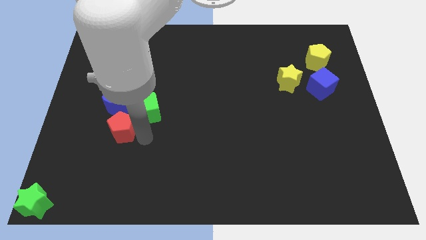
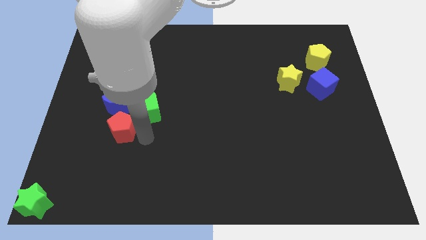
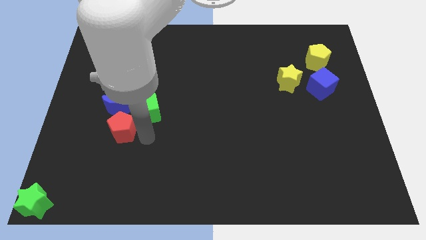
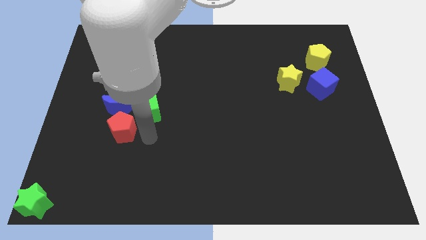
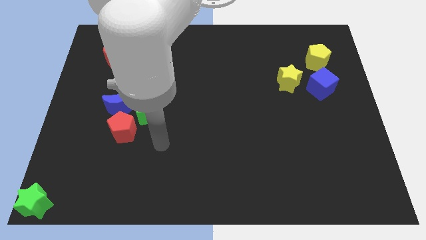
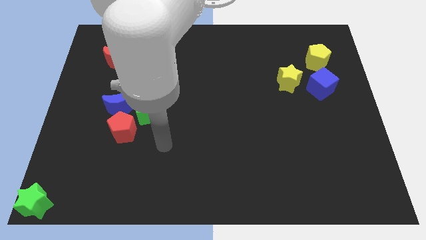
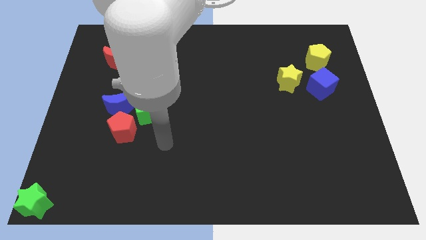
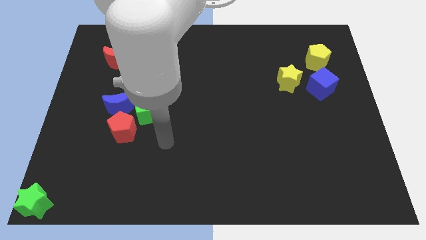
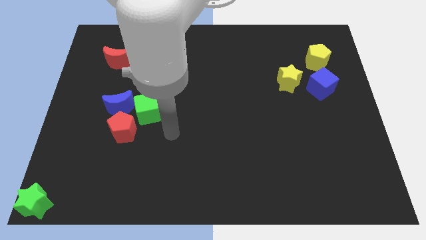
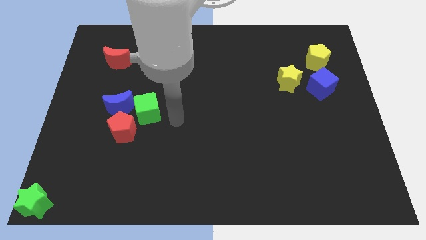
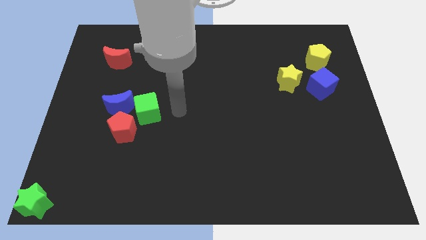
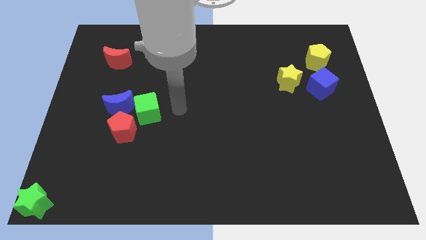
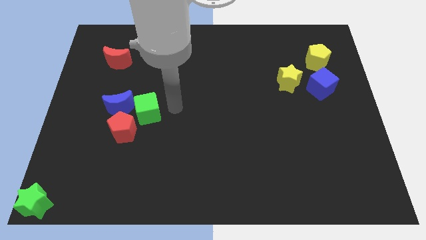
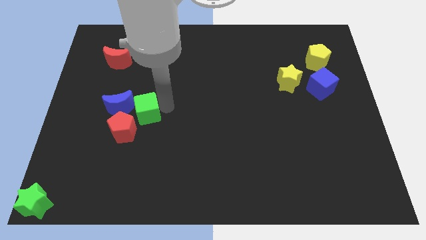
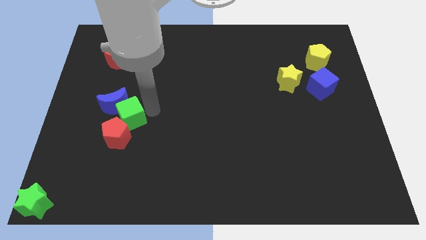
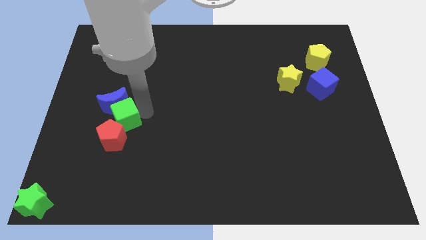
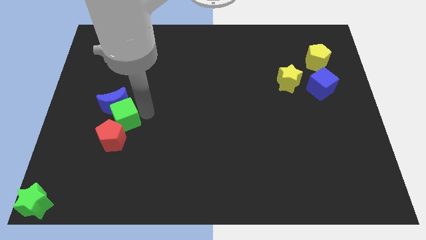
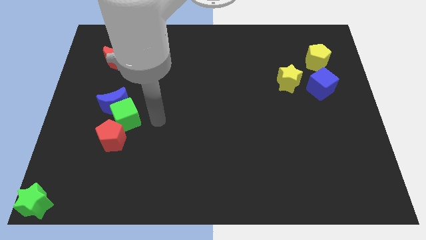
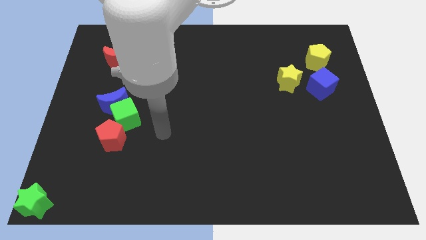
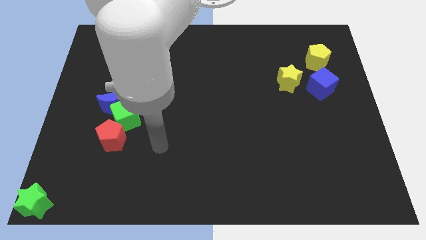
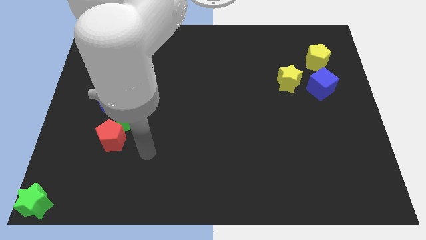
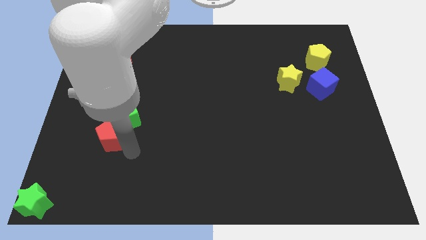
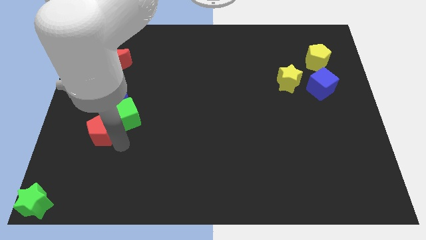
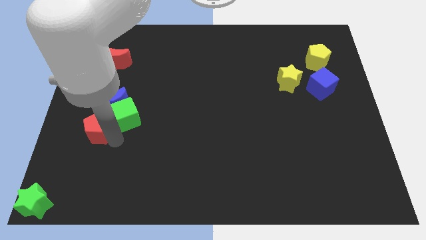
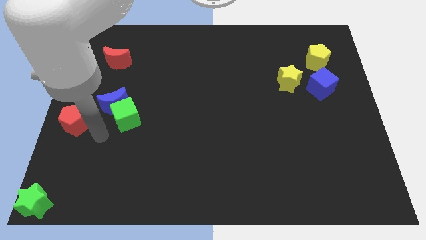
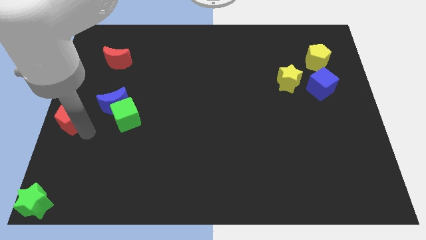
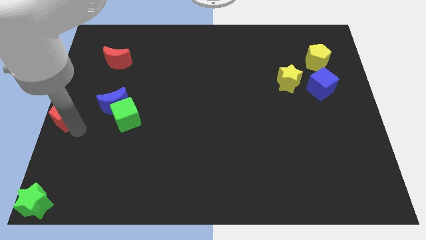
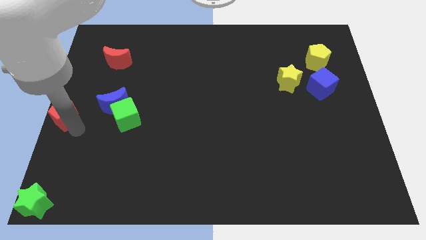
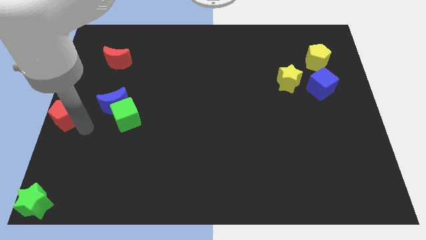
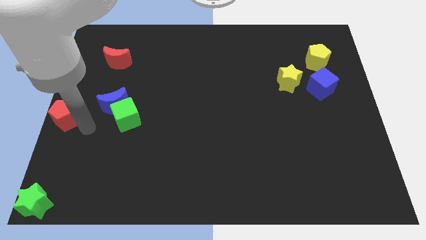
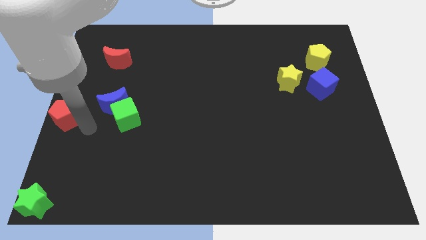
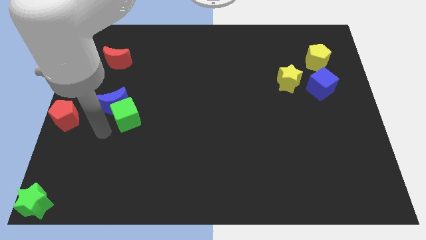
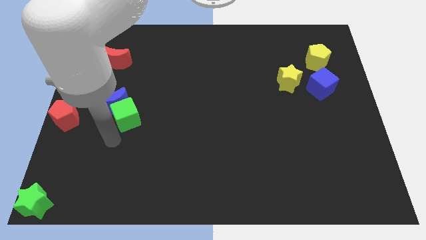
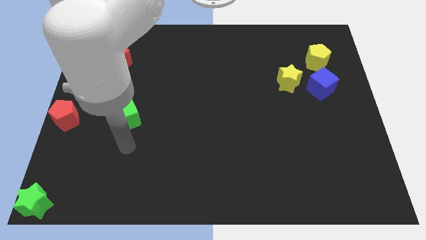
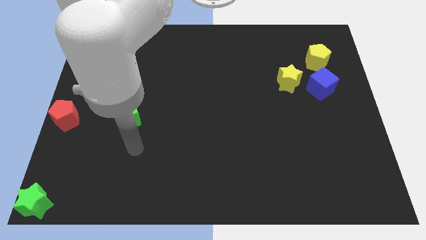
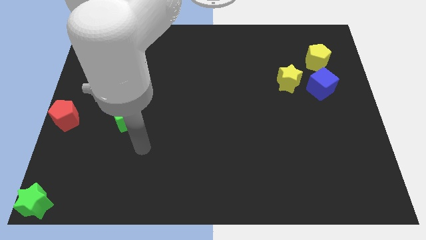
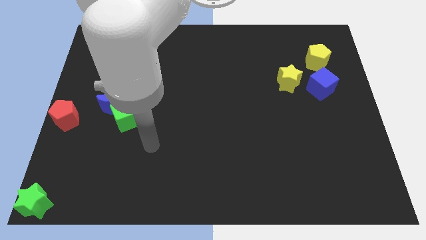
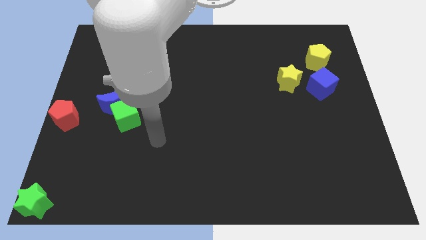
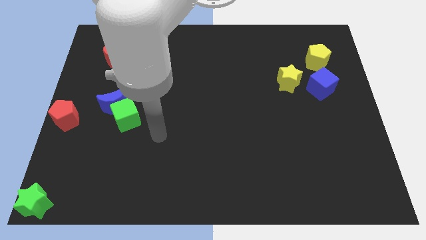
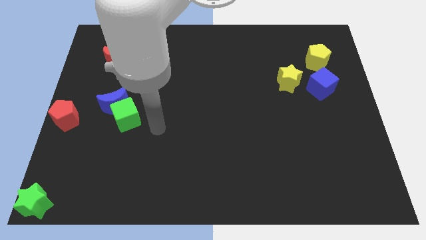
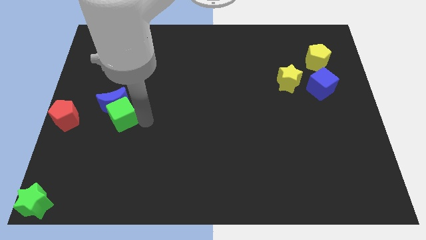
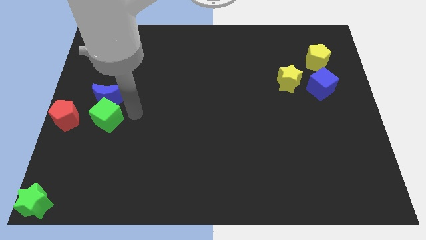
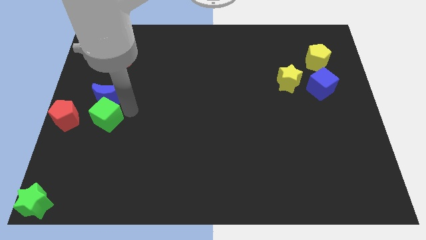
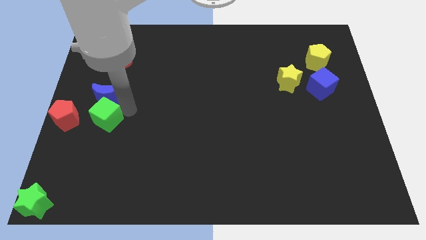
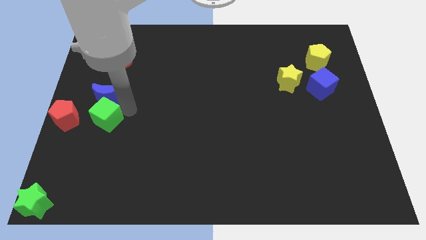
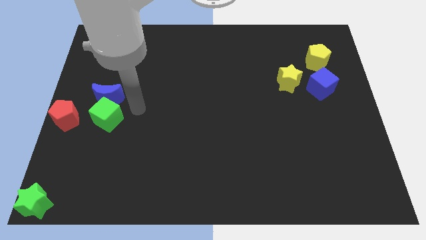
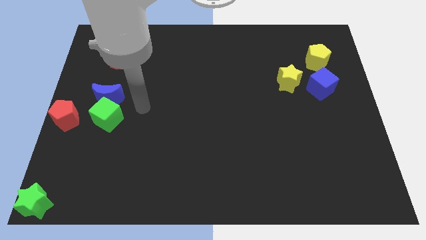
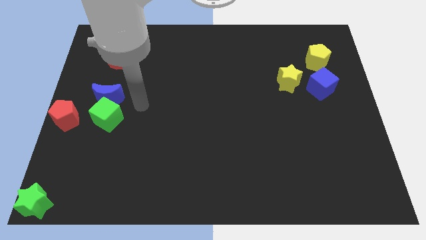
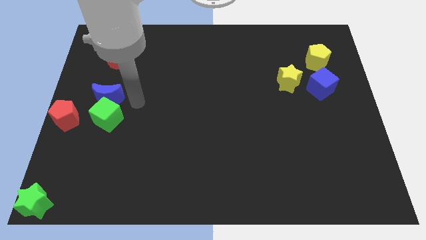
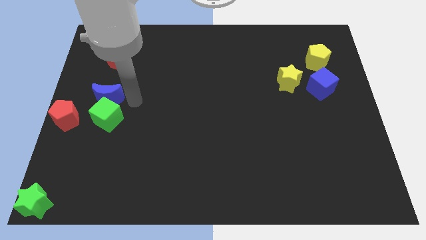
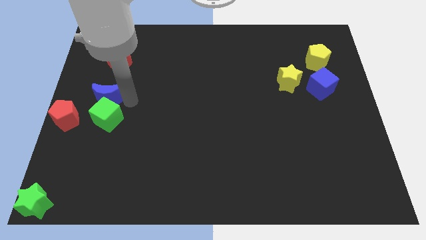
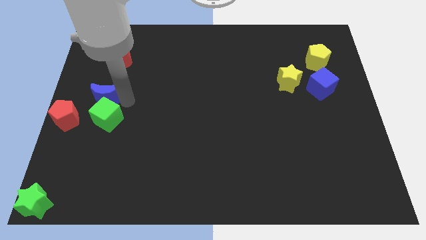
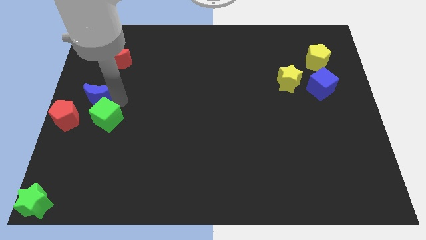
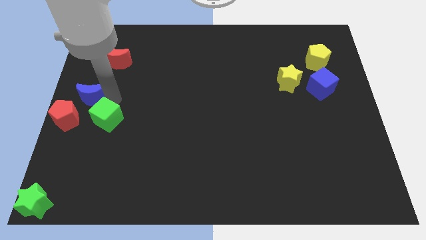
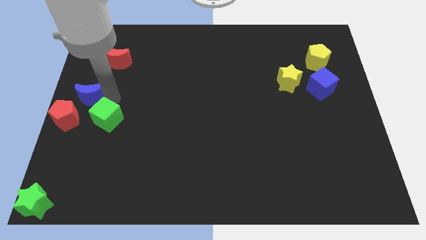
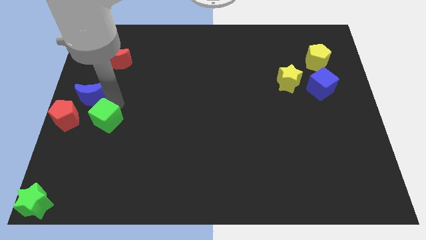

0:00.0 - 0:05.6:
move the red pentagon and the blue moon to the center left of the board

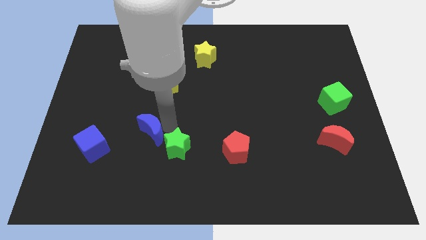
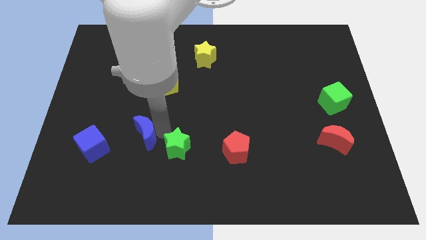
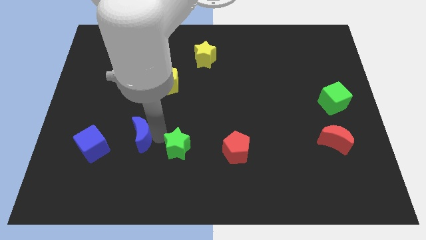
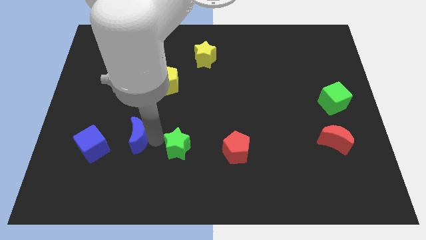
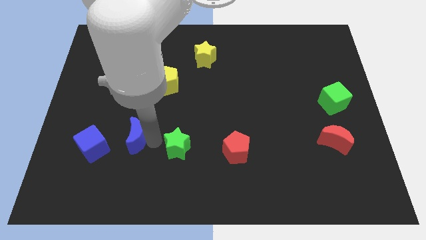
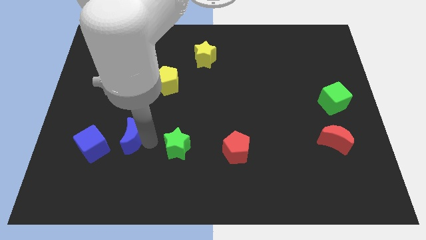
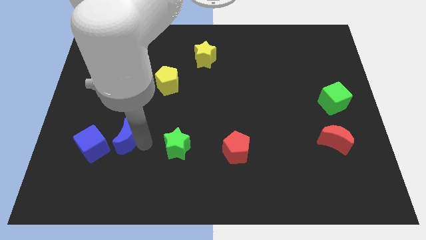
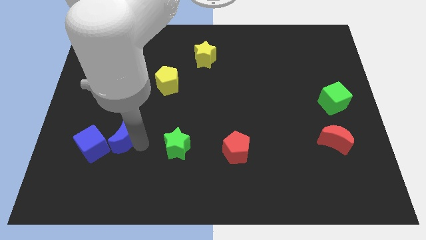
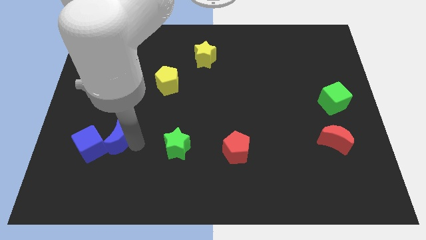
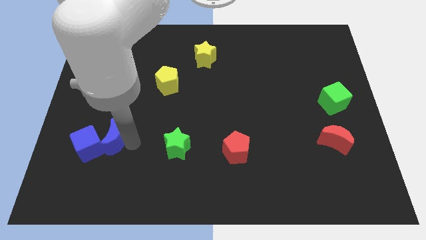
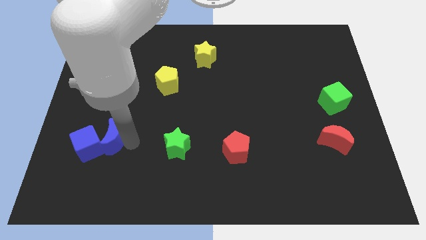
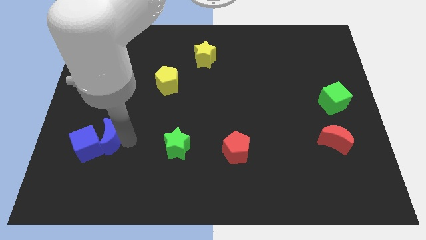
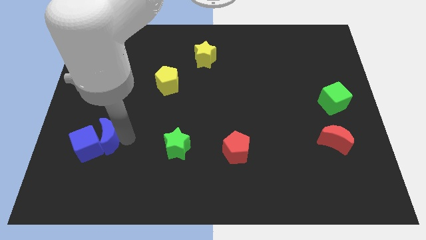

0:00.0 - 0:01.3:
push the blue crescent into the blue cube on the bottom left of the board

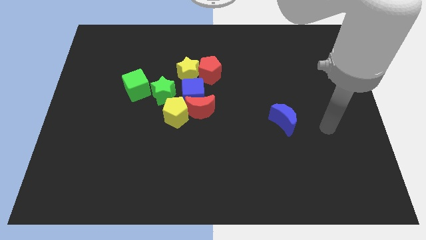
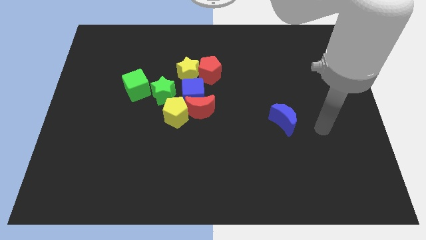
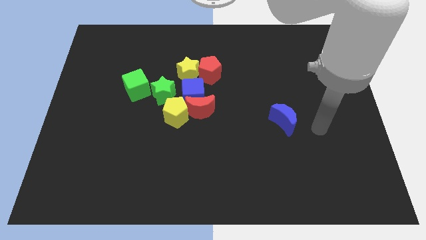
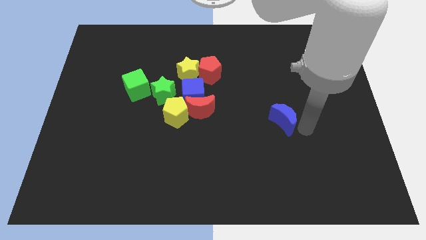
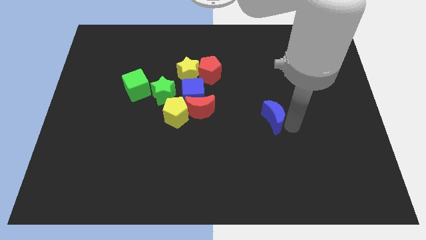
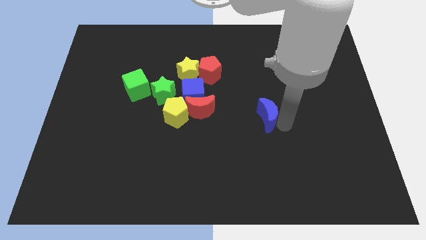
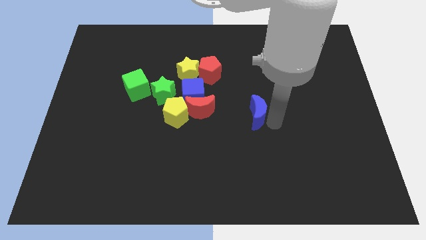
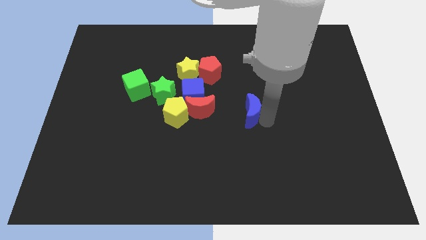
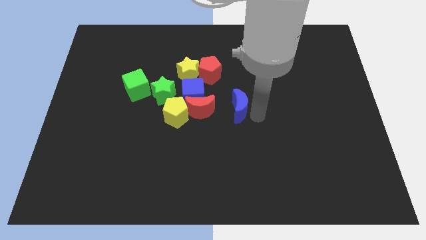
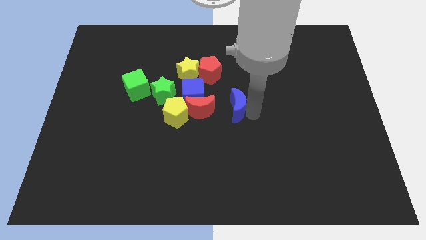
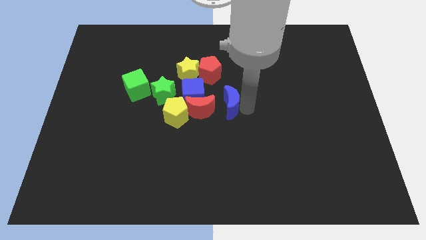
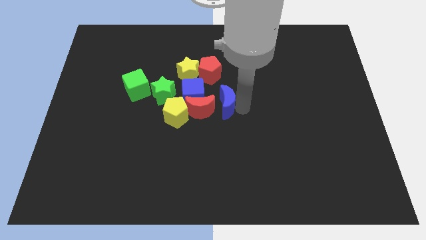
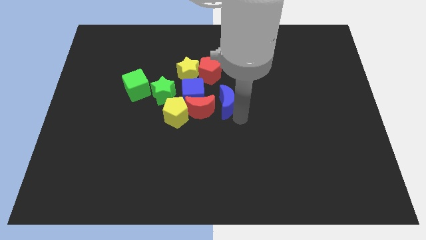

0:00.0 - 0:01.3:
move the blue moon close to the red moon

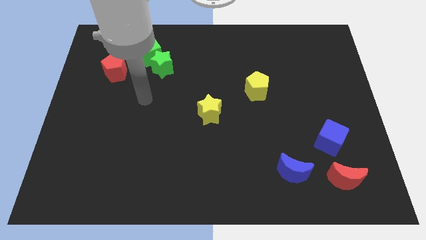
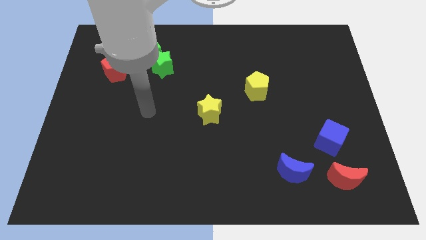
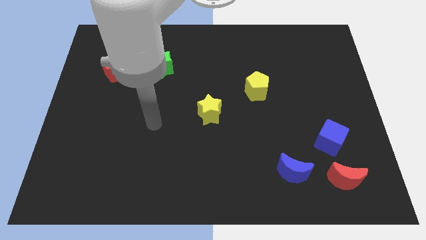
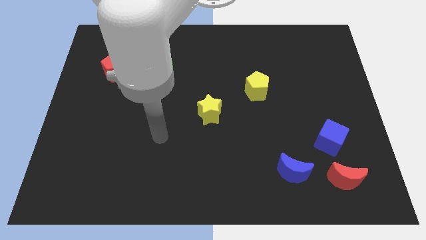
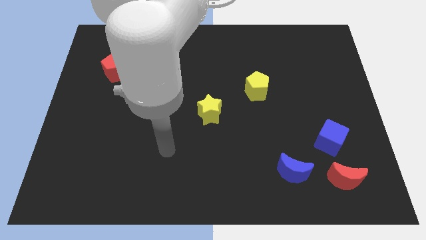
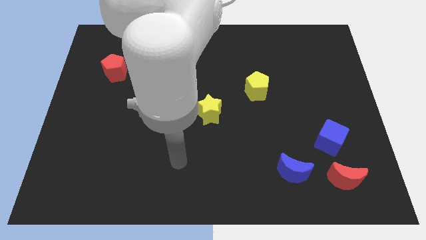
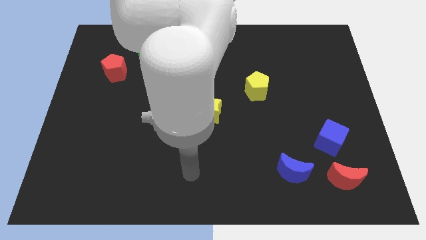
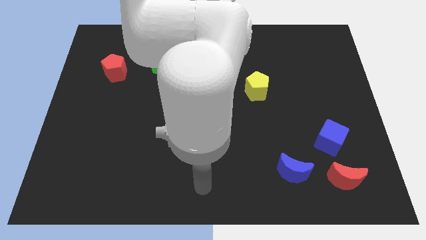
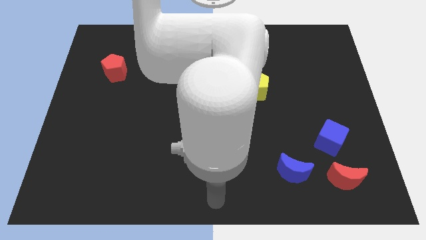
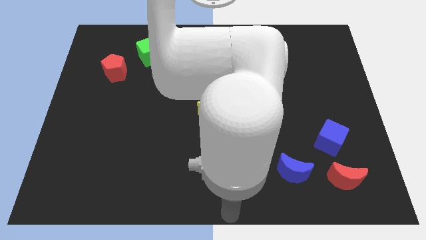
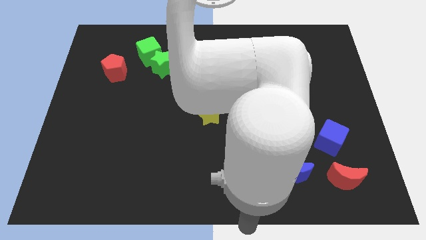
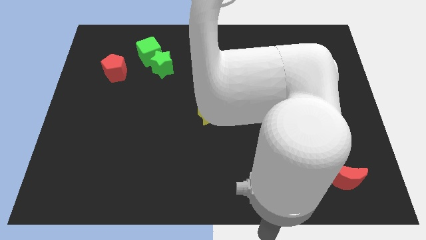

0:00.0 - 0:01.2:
place your hand at the bottom center of the board
